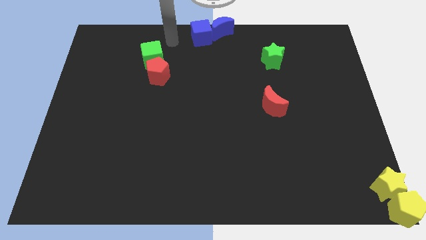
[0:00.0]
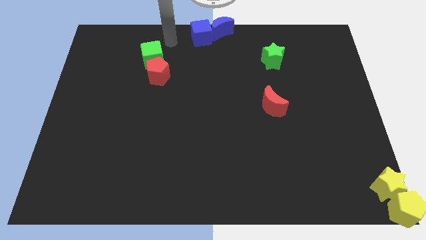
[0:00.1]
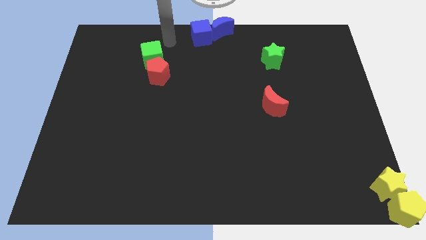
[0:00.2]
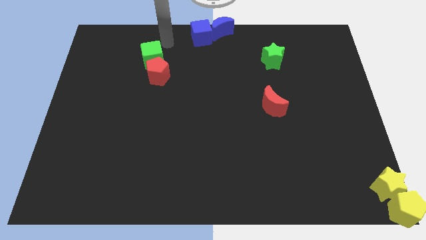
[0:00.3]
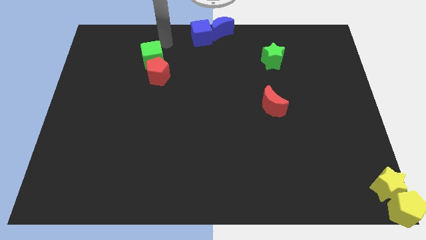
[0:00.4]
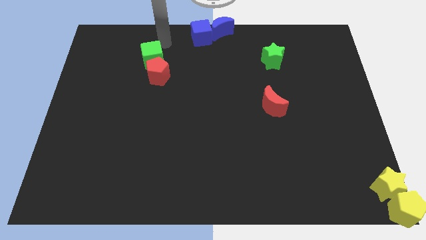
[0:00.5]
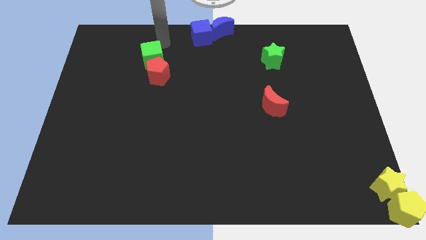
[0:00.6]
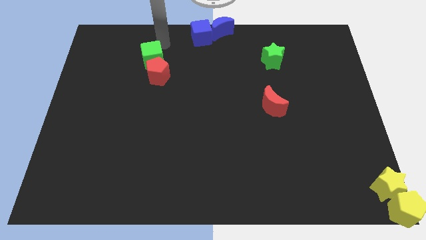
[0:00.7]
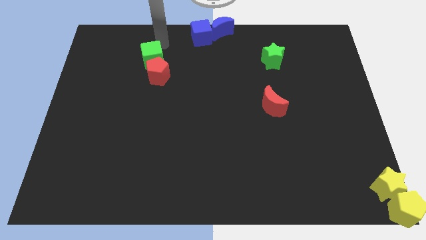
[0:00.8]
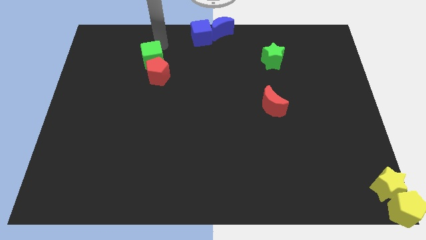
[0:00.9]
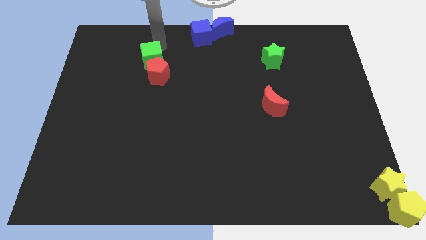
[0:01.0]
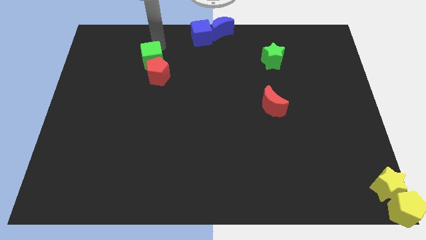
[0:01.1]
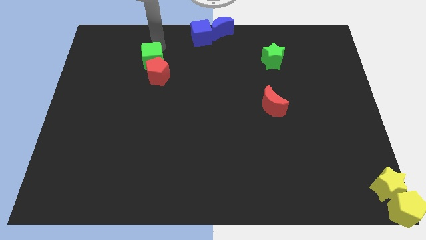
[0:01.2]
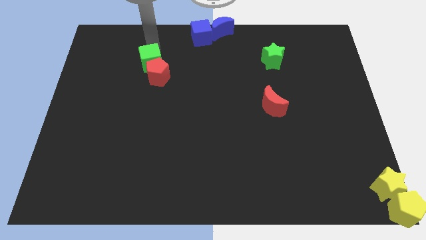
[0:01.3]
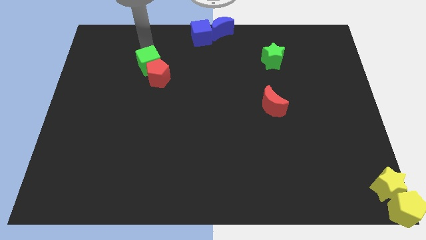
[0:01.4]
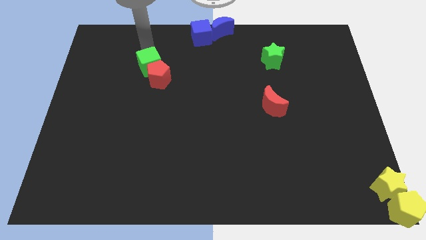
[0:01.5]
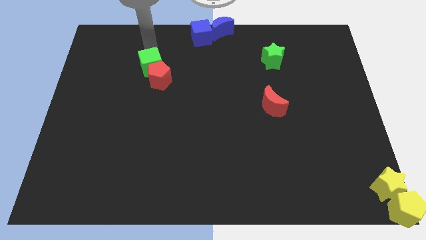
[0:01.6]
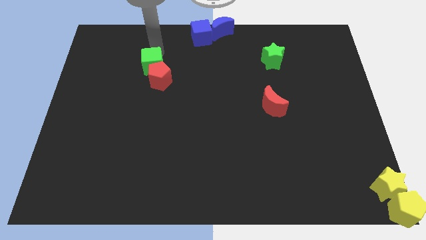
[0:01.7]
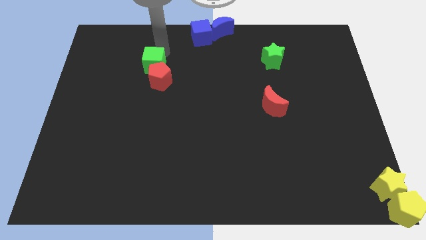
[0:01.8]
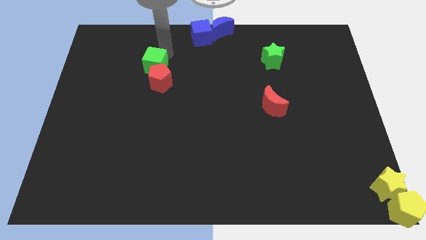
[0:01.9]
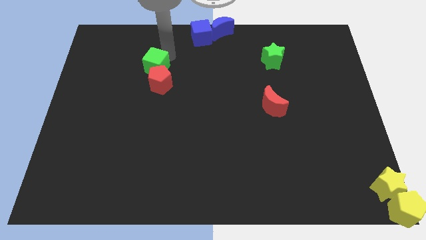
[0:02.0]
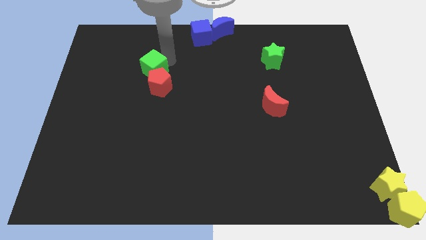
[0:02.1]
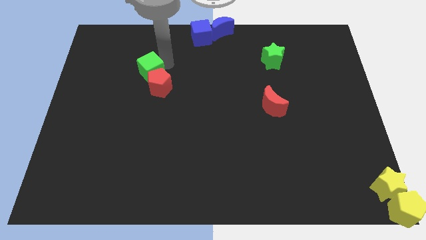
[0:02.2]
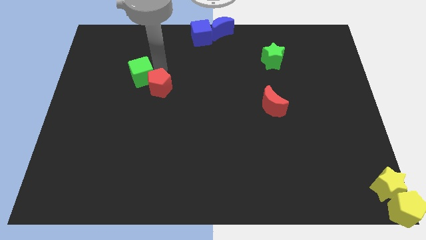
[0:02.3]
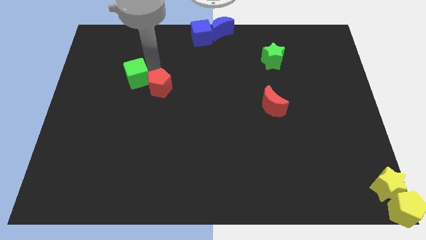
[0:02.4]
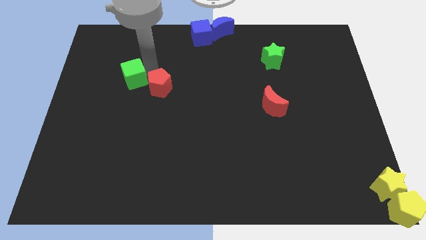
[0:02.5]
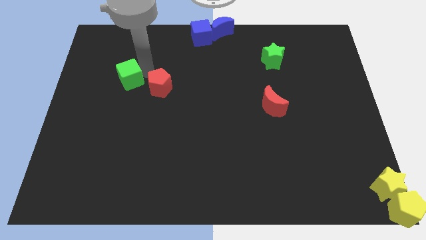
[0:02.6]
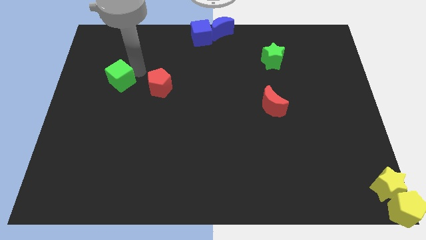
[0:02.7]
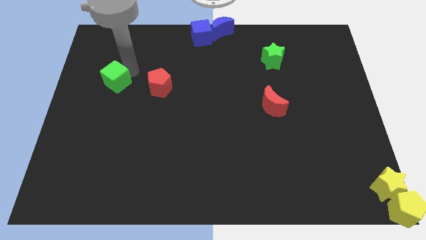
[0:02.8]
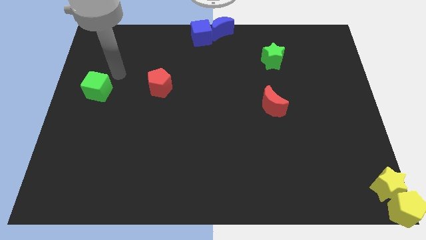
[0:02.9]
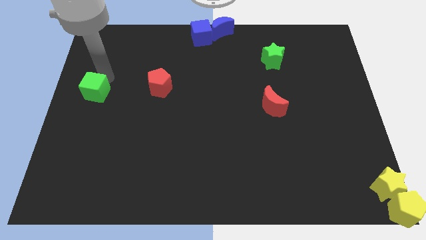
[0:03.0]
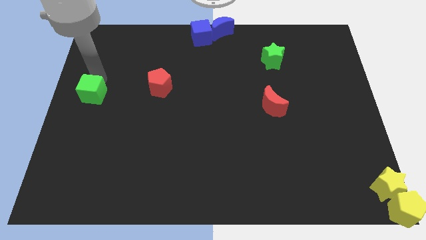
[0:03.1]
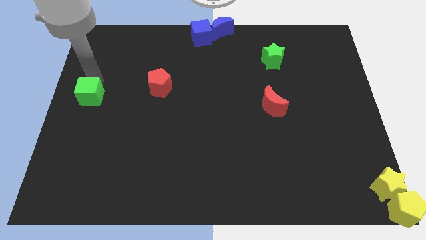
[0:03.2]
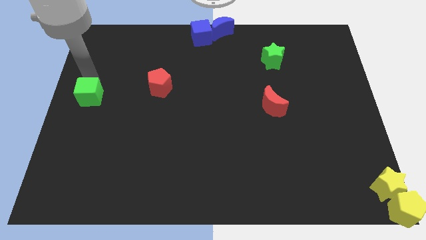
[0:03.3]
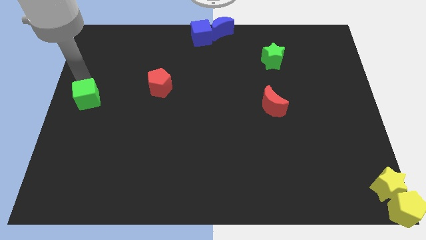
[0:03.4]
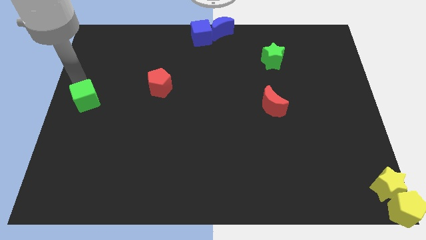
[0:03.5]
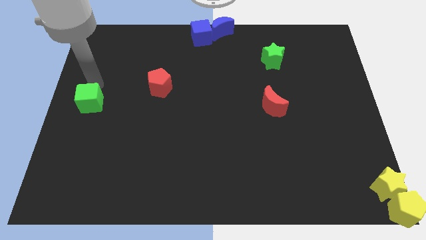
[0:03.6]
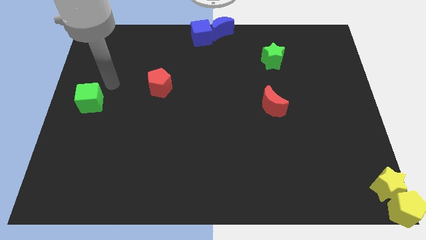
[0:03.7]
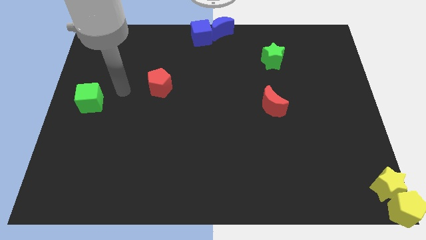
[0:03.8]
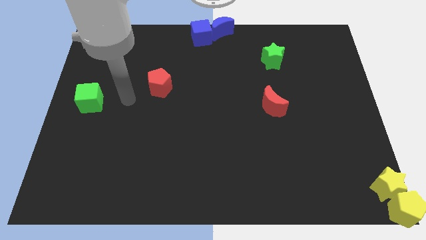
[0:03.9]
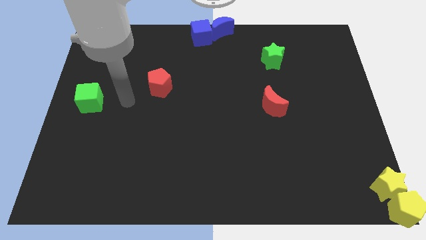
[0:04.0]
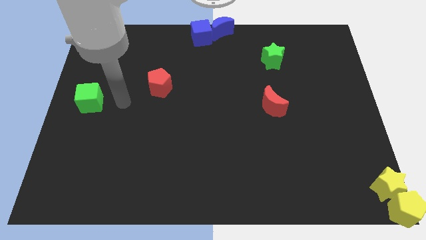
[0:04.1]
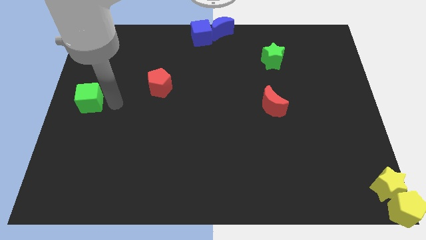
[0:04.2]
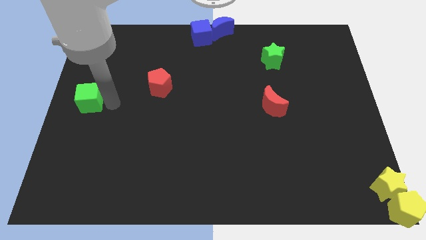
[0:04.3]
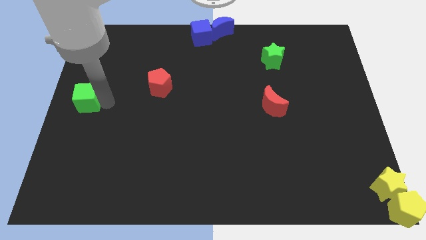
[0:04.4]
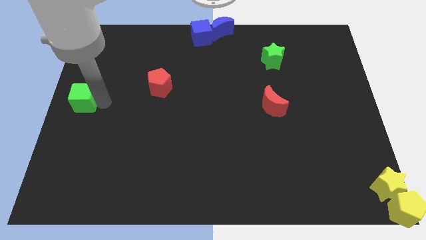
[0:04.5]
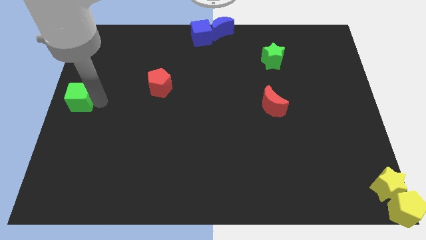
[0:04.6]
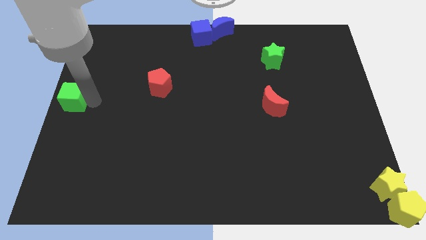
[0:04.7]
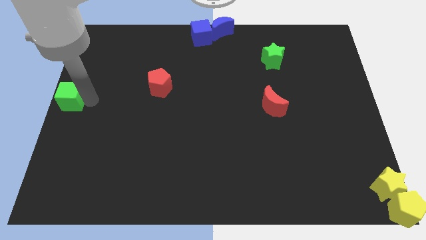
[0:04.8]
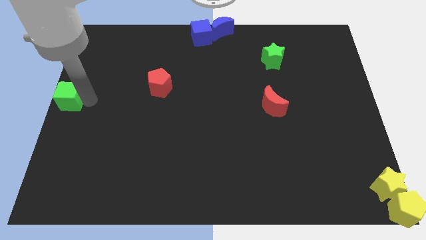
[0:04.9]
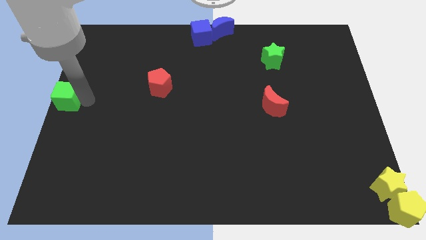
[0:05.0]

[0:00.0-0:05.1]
place green cube to the center left

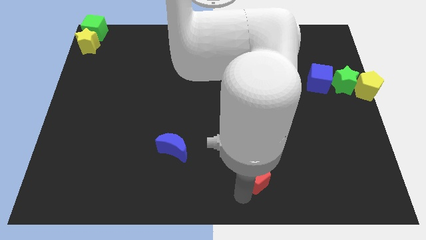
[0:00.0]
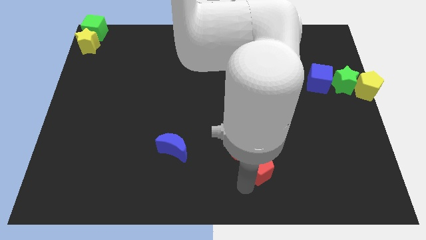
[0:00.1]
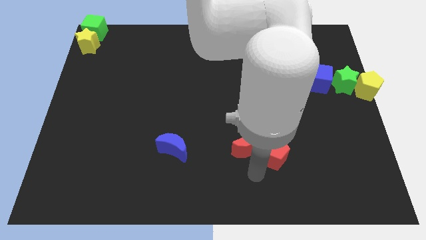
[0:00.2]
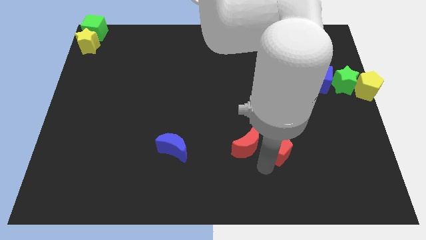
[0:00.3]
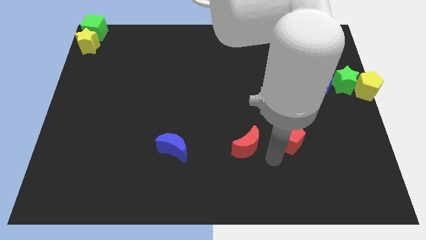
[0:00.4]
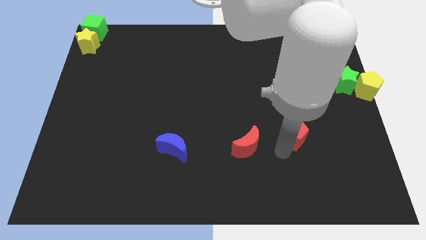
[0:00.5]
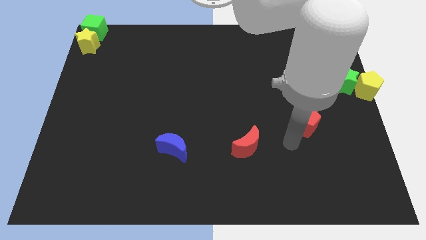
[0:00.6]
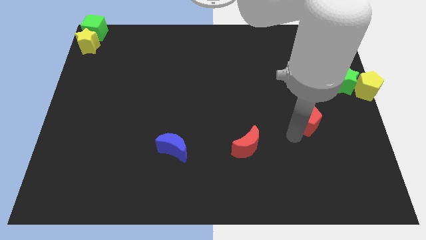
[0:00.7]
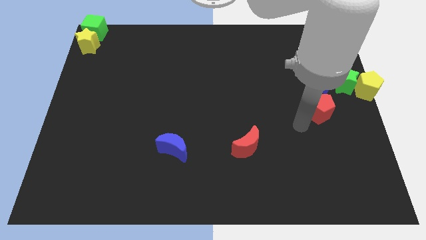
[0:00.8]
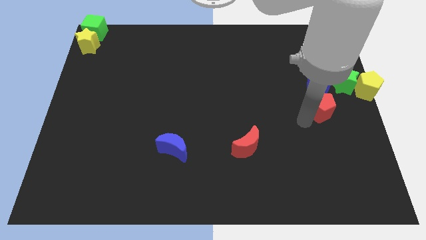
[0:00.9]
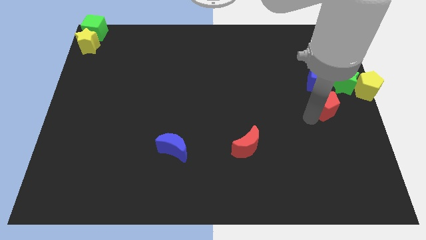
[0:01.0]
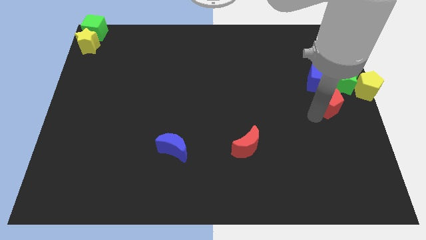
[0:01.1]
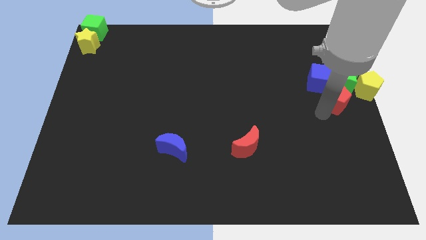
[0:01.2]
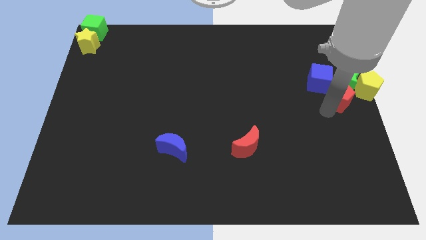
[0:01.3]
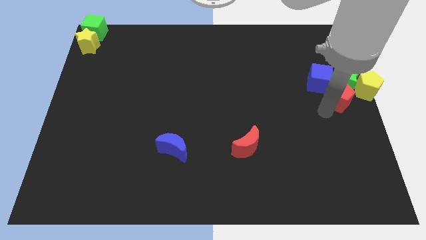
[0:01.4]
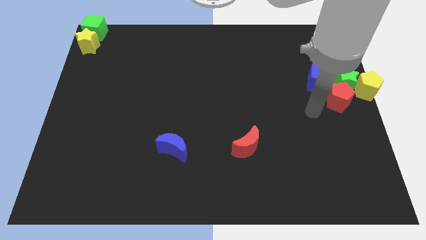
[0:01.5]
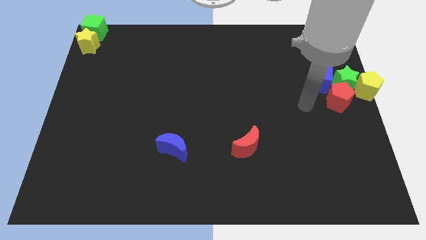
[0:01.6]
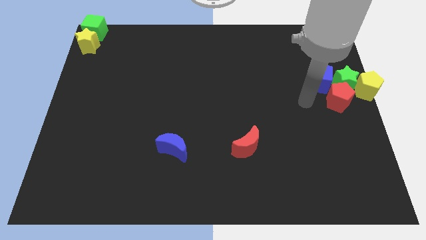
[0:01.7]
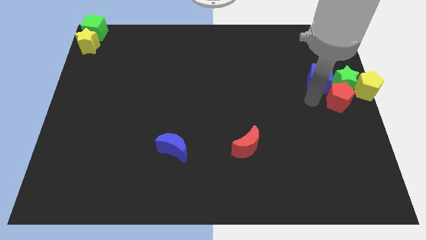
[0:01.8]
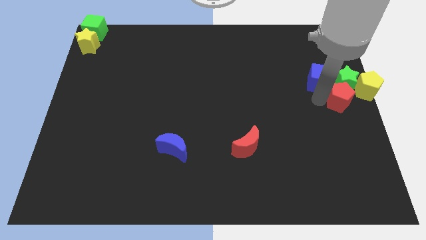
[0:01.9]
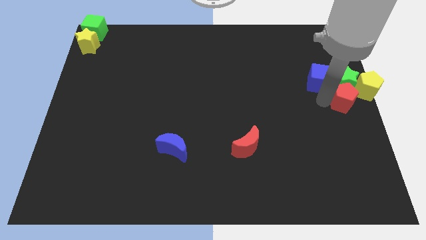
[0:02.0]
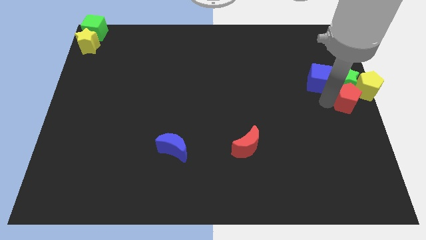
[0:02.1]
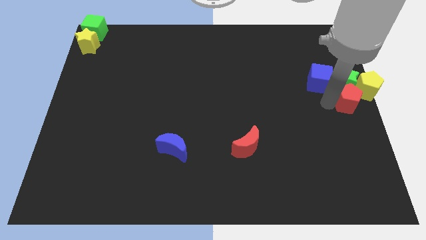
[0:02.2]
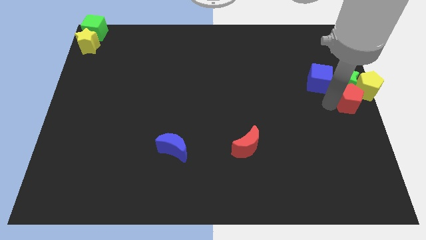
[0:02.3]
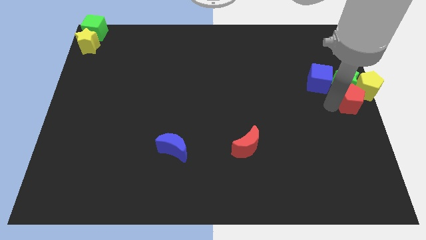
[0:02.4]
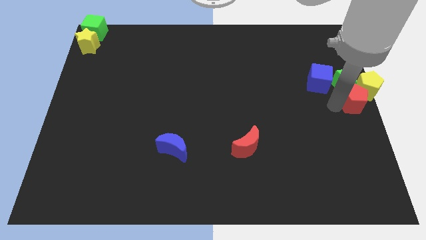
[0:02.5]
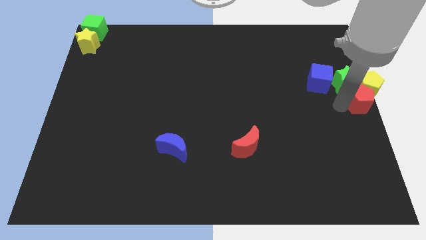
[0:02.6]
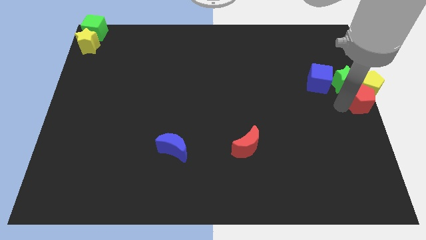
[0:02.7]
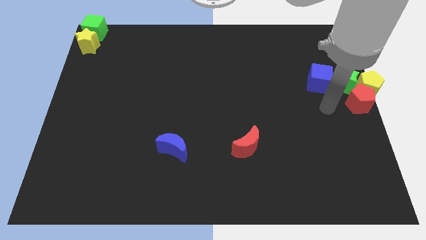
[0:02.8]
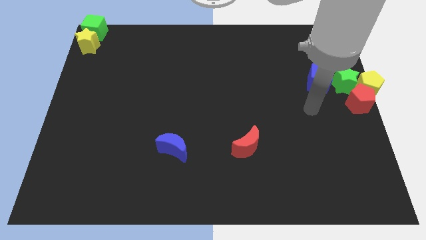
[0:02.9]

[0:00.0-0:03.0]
put the red pentagon at the center right side of the board

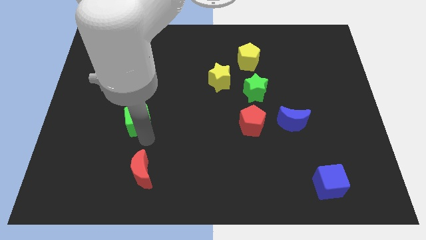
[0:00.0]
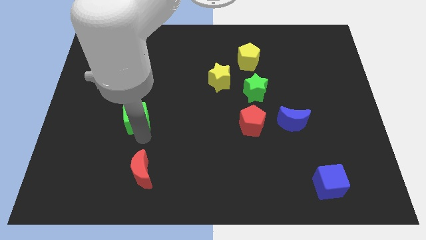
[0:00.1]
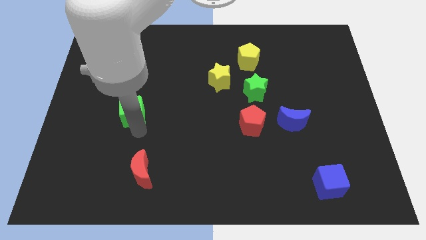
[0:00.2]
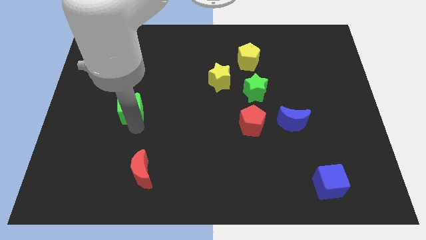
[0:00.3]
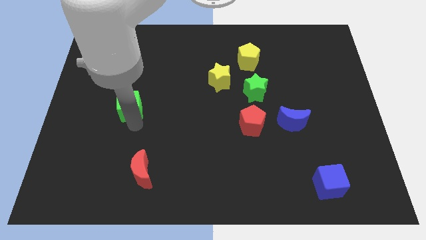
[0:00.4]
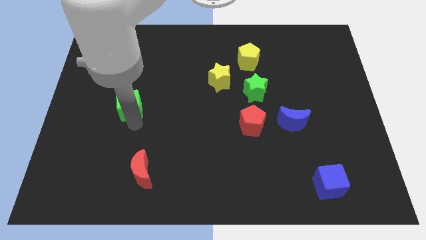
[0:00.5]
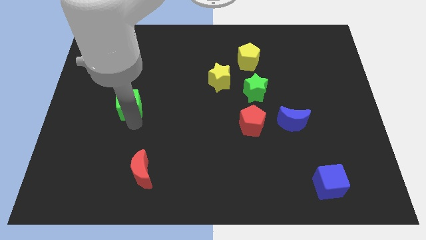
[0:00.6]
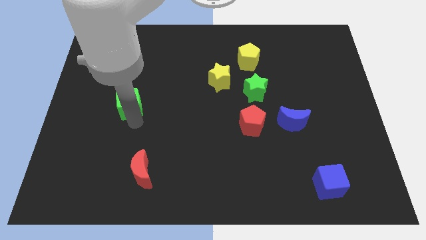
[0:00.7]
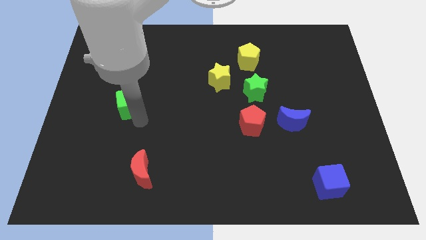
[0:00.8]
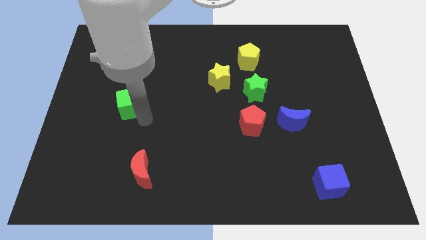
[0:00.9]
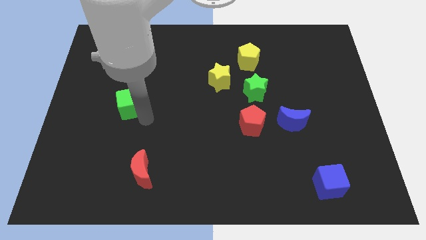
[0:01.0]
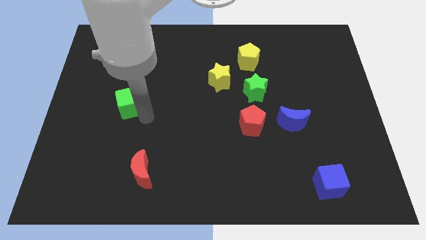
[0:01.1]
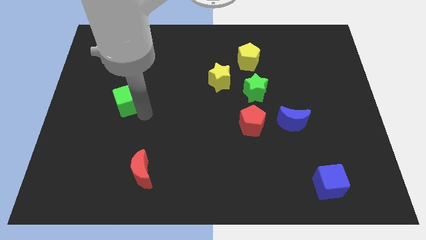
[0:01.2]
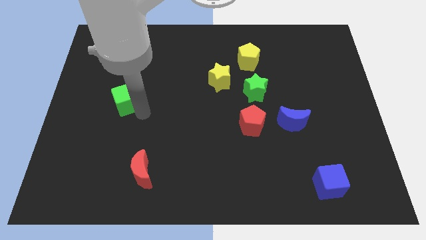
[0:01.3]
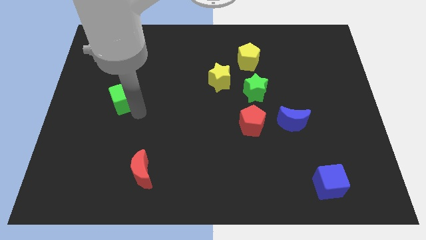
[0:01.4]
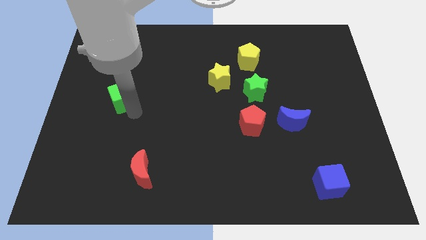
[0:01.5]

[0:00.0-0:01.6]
move the green cube upwards of the board
